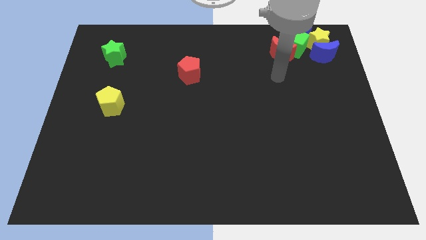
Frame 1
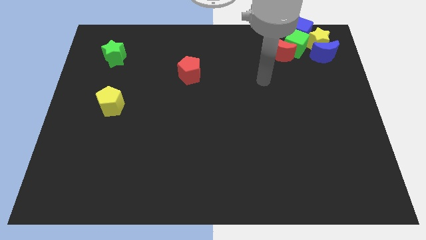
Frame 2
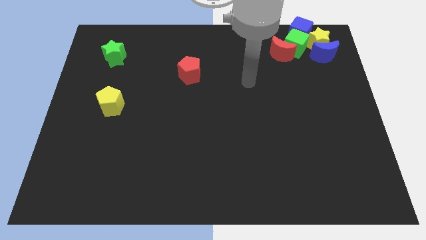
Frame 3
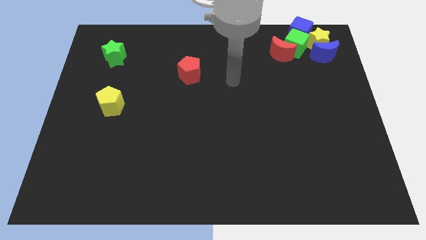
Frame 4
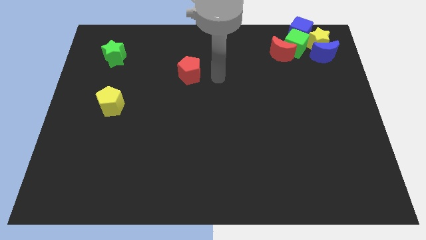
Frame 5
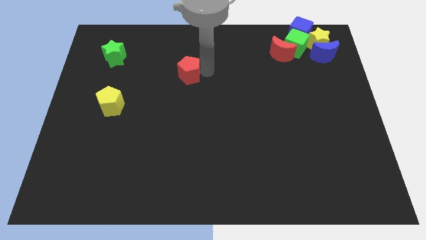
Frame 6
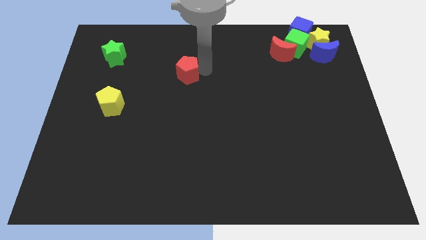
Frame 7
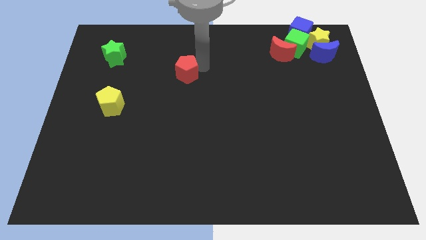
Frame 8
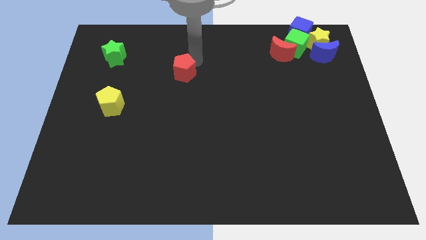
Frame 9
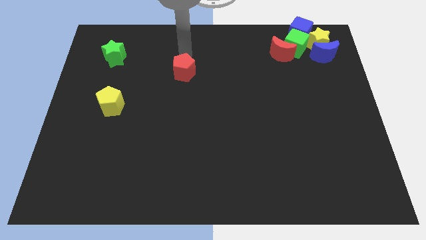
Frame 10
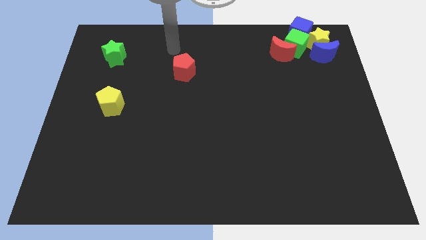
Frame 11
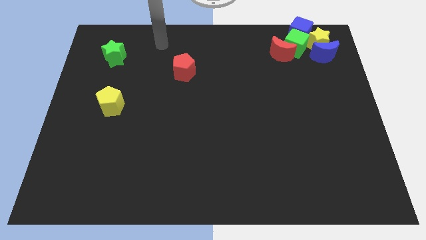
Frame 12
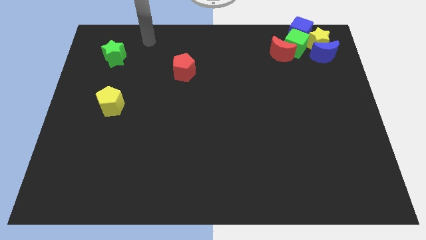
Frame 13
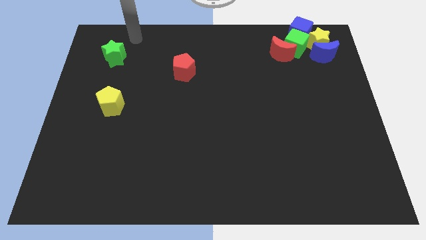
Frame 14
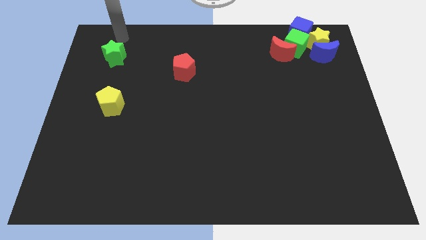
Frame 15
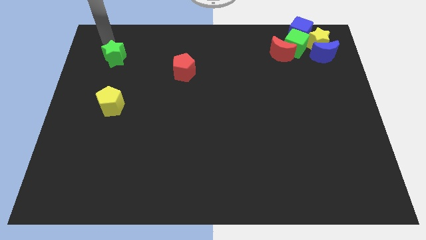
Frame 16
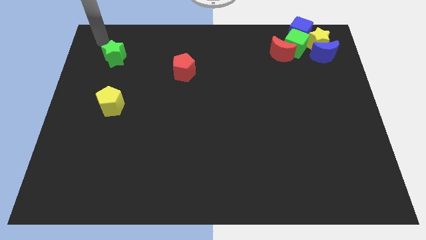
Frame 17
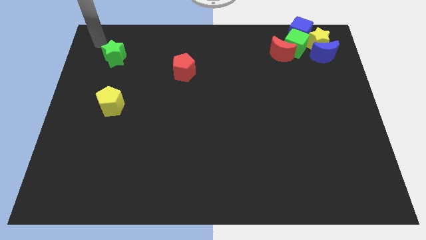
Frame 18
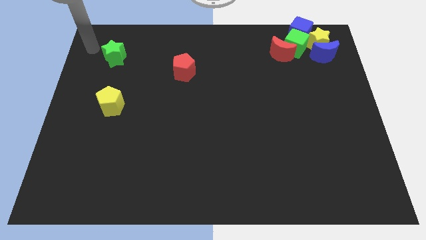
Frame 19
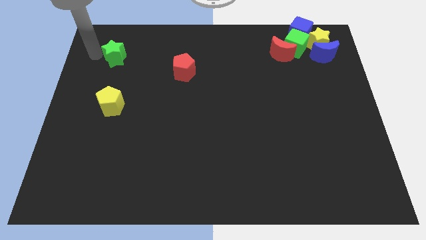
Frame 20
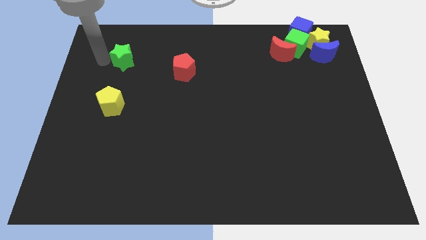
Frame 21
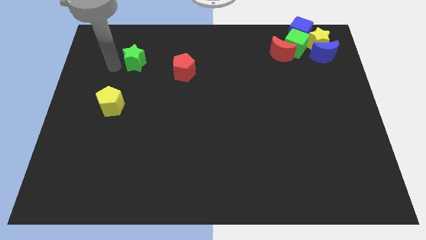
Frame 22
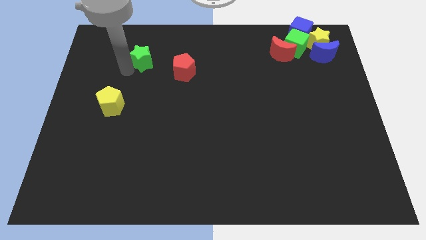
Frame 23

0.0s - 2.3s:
move the green star to the right slightly

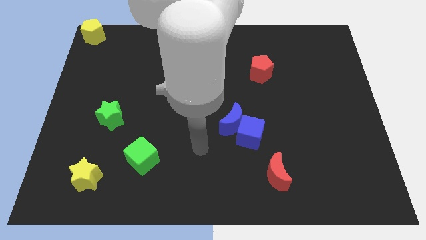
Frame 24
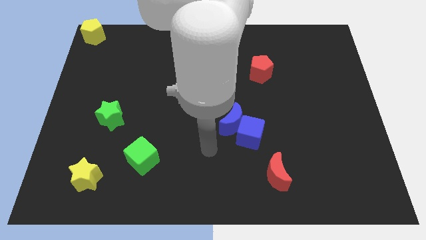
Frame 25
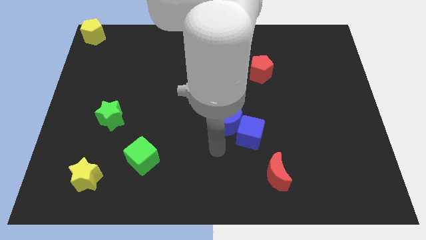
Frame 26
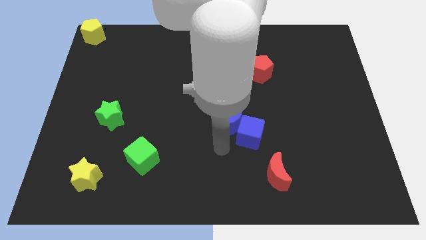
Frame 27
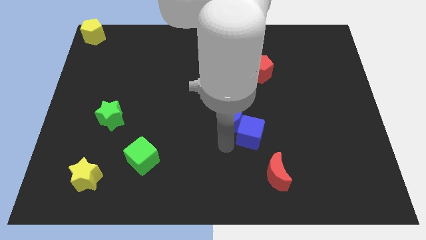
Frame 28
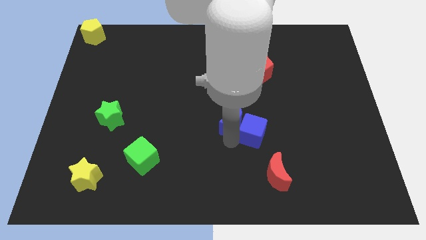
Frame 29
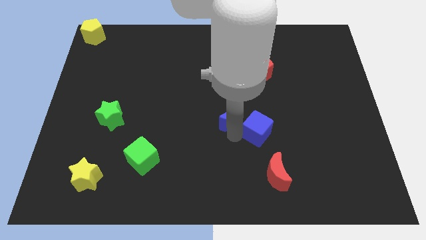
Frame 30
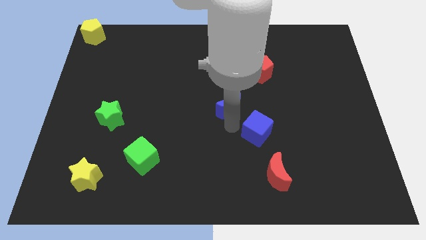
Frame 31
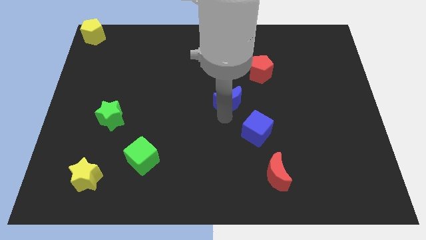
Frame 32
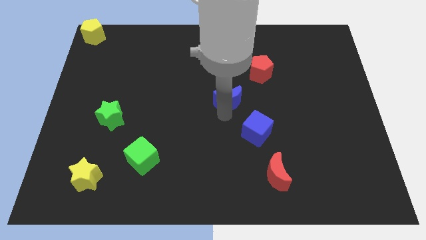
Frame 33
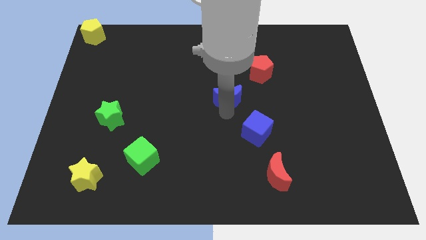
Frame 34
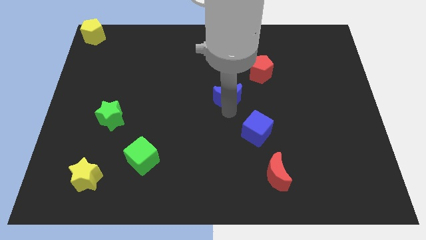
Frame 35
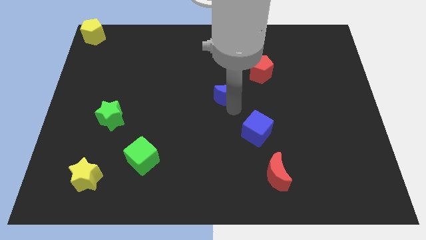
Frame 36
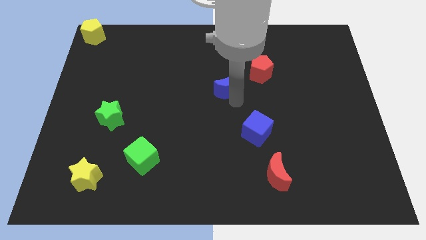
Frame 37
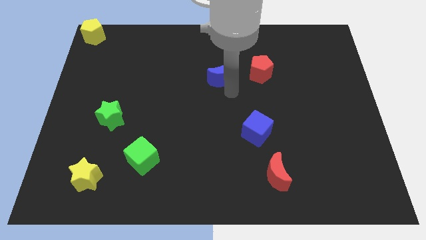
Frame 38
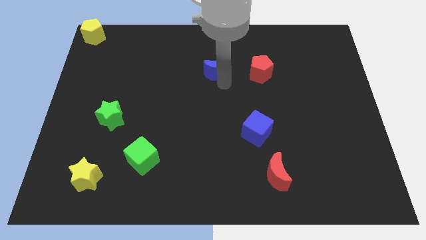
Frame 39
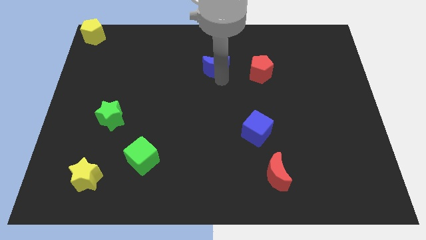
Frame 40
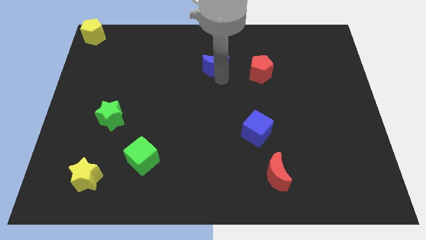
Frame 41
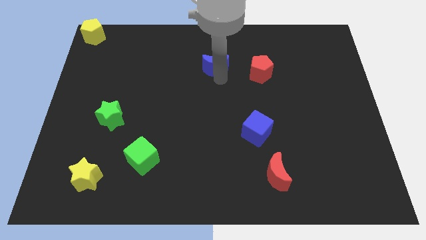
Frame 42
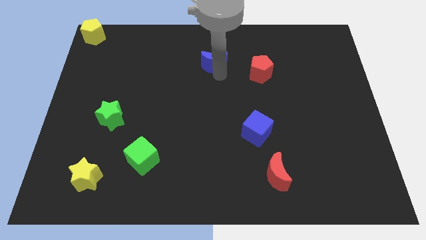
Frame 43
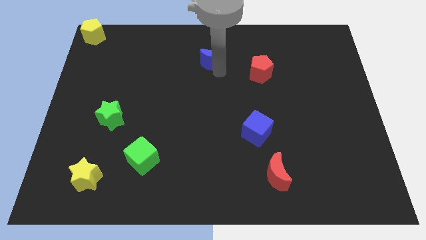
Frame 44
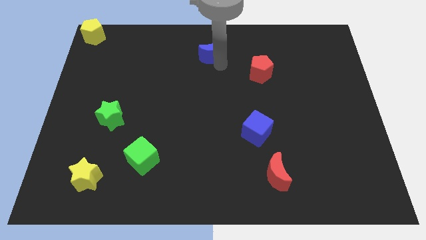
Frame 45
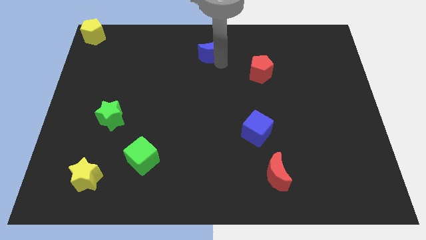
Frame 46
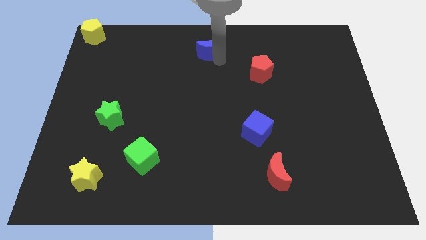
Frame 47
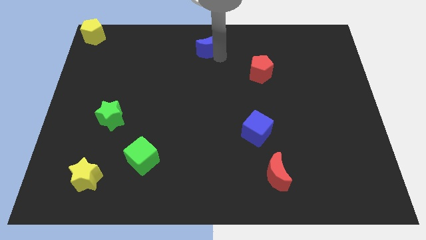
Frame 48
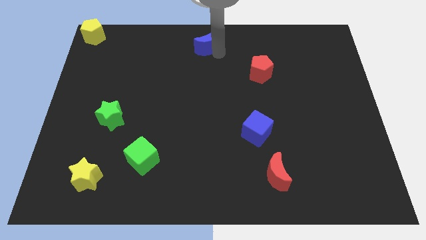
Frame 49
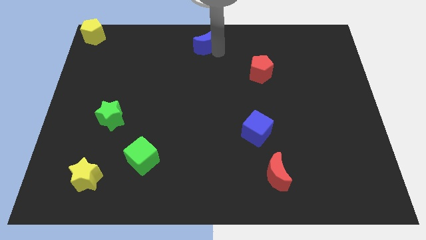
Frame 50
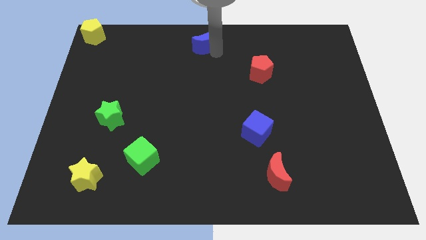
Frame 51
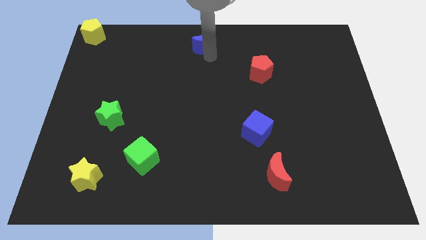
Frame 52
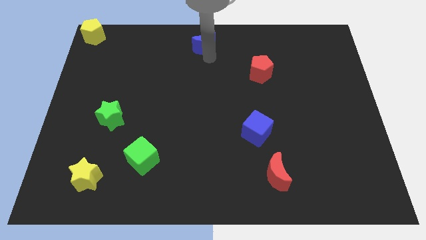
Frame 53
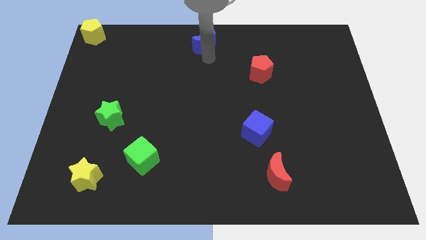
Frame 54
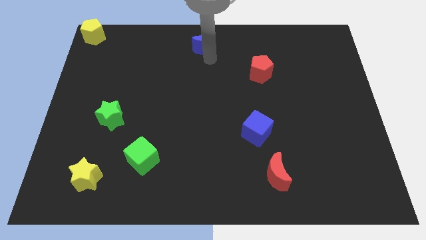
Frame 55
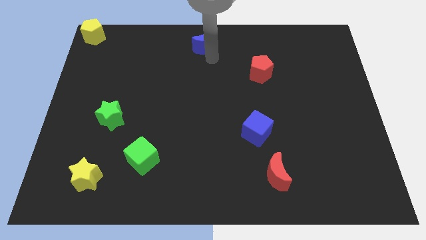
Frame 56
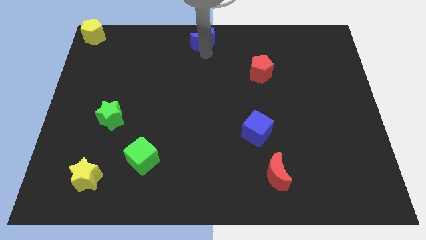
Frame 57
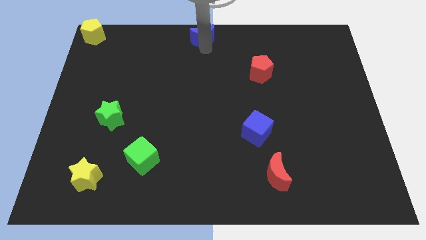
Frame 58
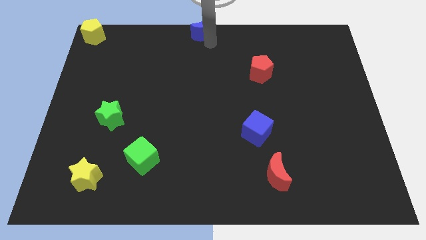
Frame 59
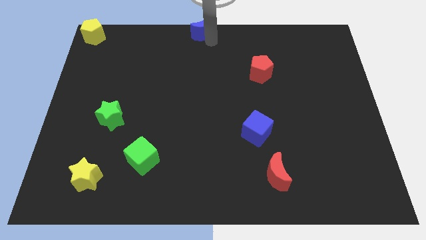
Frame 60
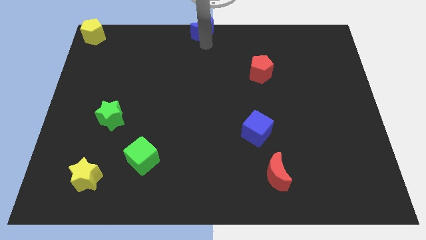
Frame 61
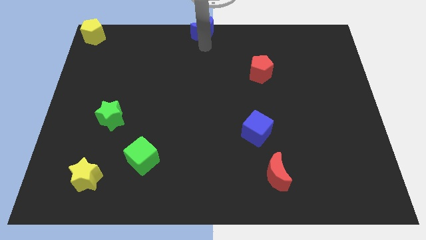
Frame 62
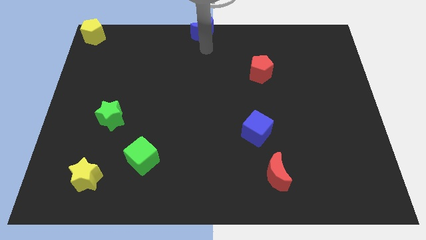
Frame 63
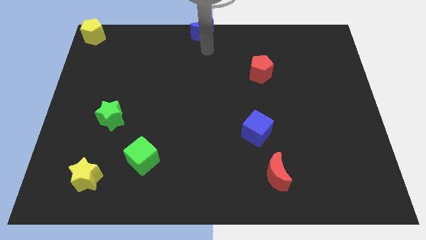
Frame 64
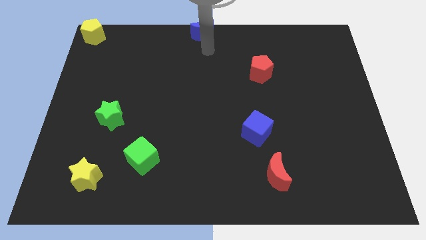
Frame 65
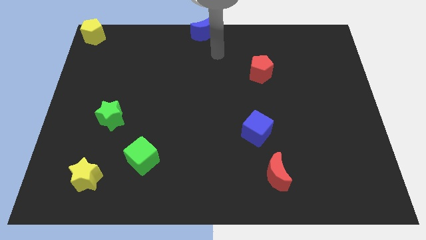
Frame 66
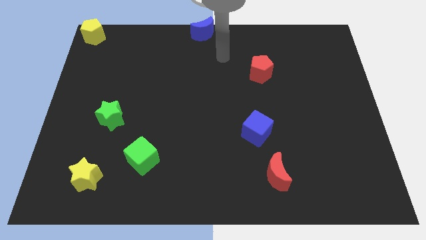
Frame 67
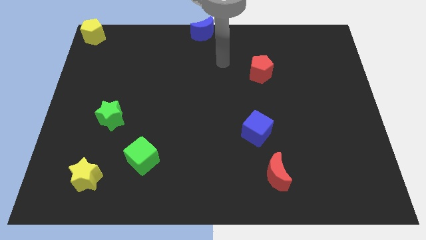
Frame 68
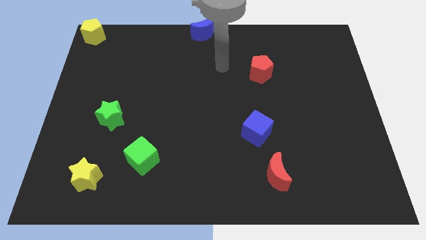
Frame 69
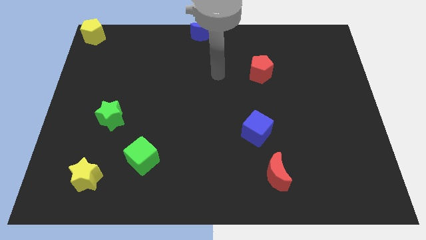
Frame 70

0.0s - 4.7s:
drag the blue moon to top center of the board

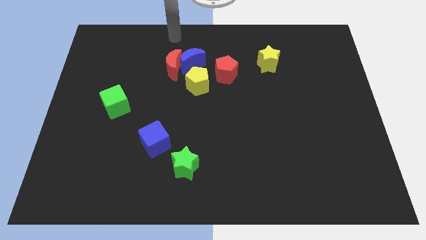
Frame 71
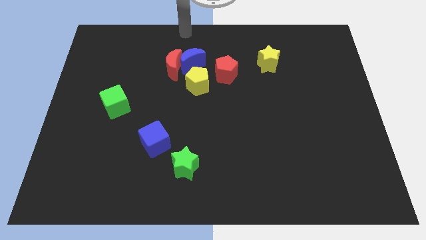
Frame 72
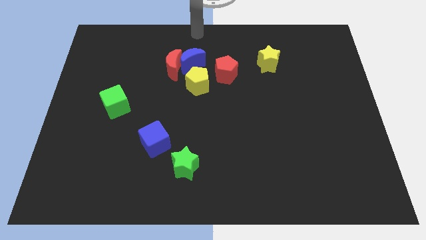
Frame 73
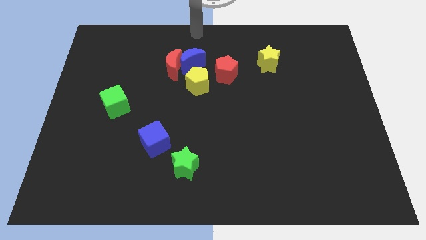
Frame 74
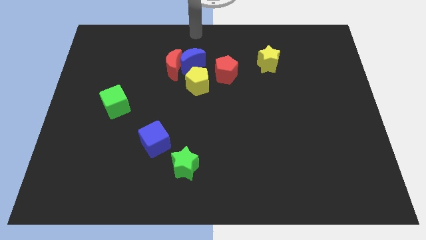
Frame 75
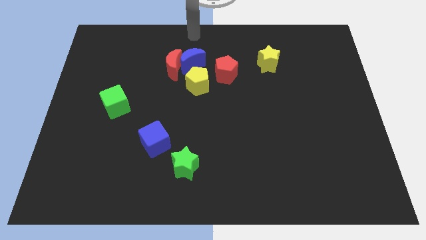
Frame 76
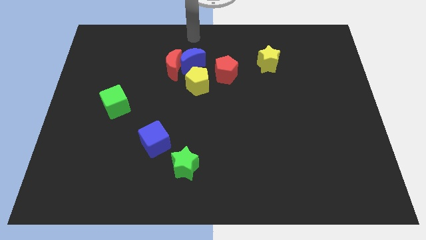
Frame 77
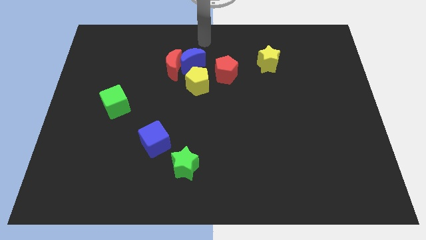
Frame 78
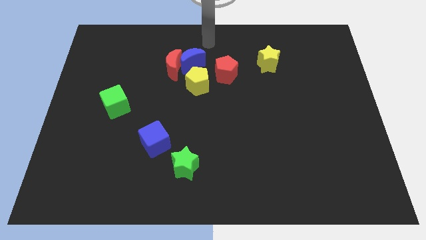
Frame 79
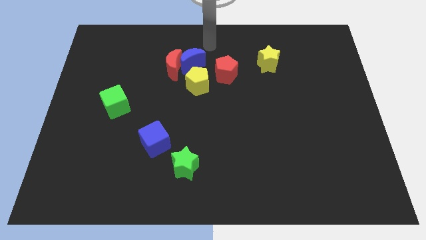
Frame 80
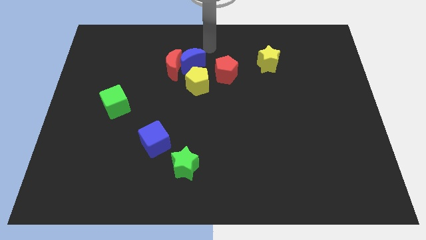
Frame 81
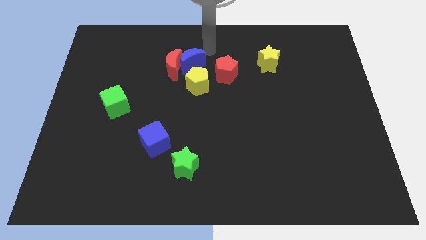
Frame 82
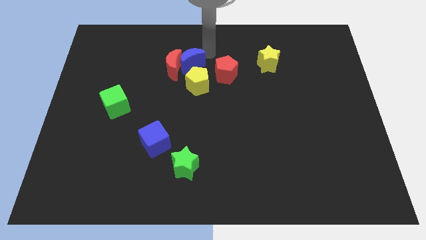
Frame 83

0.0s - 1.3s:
move arm on the top of blue moon

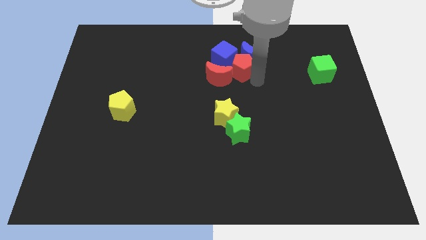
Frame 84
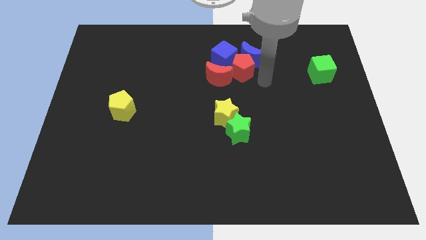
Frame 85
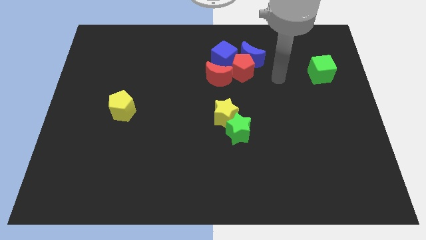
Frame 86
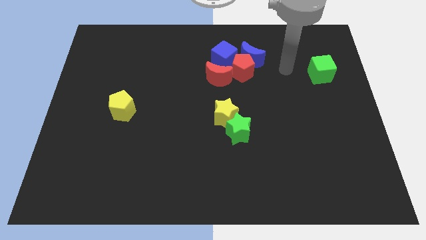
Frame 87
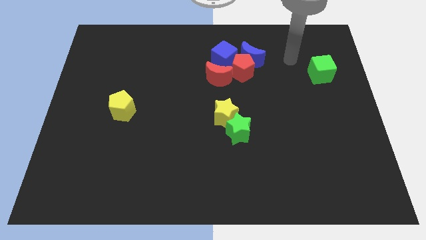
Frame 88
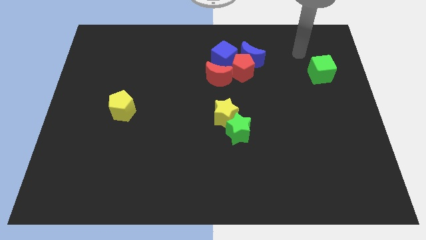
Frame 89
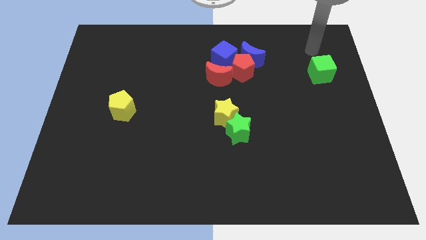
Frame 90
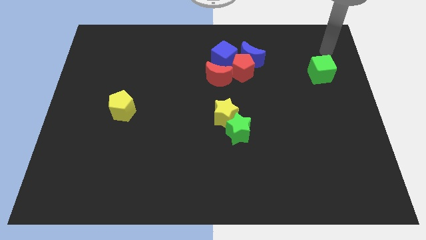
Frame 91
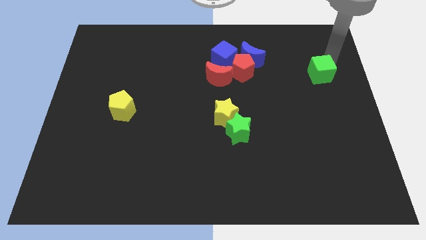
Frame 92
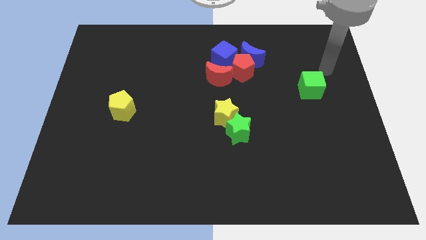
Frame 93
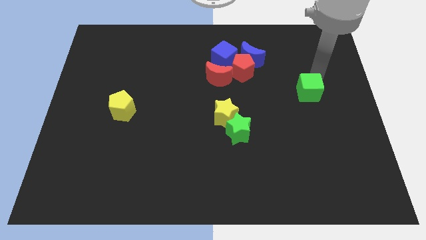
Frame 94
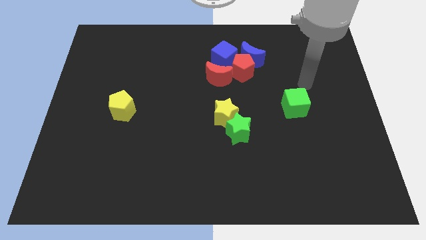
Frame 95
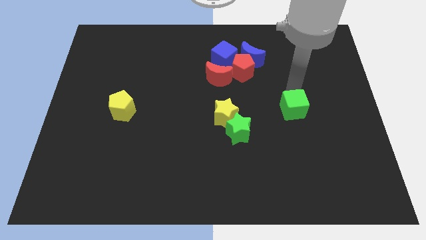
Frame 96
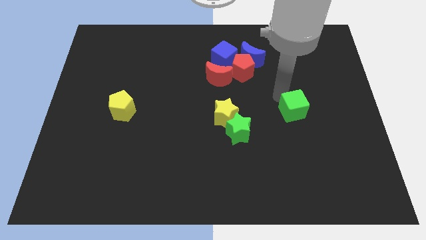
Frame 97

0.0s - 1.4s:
push the green cube towards the bottom side of the board
